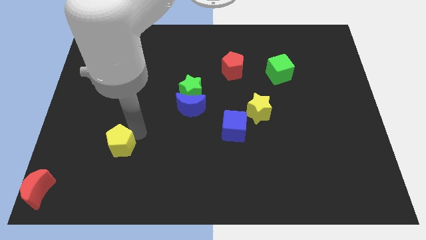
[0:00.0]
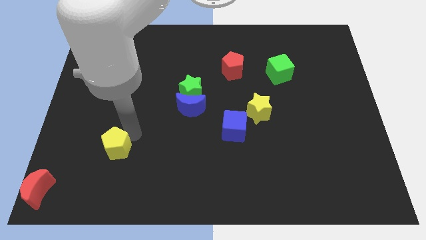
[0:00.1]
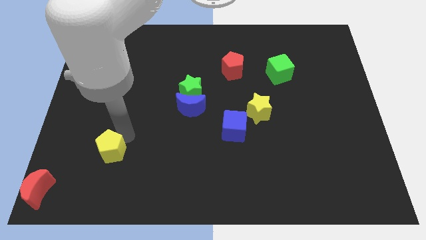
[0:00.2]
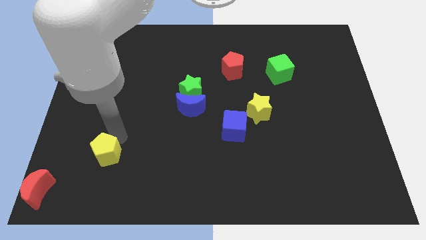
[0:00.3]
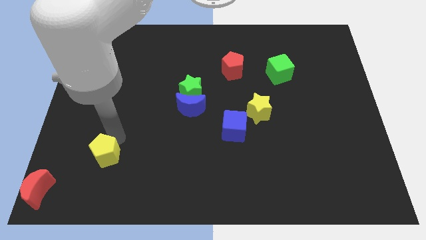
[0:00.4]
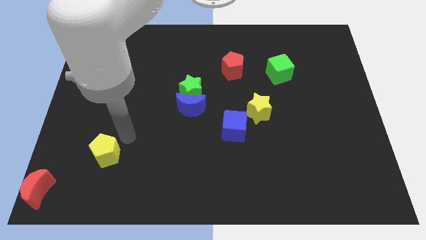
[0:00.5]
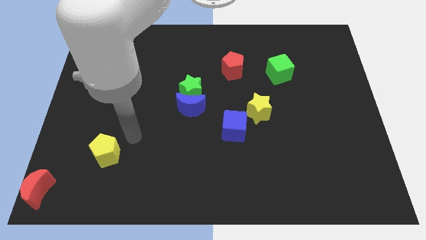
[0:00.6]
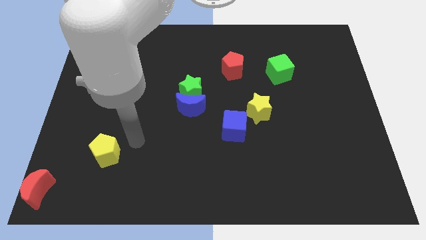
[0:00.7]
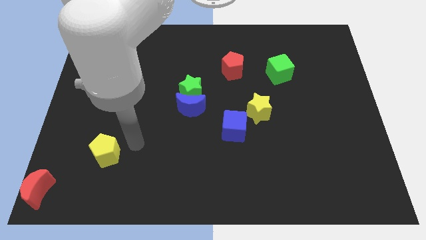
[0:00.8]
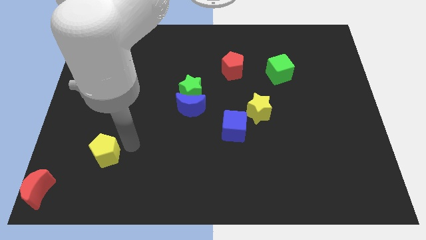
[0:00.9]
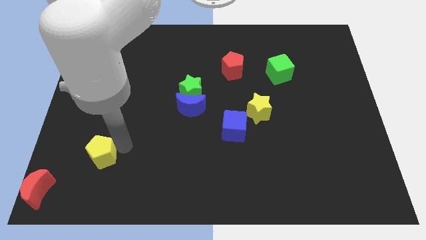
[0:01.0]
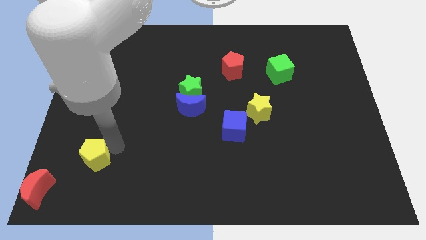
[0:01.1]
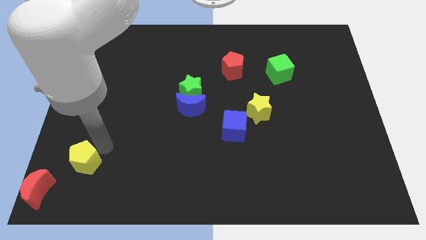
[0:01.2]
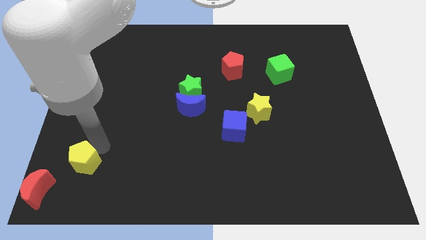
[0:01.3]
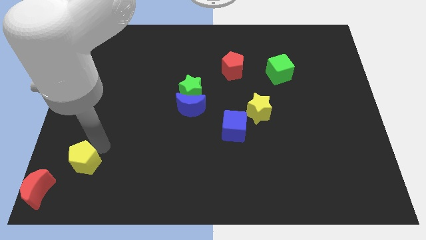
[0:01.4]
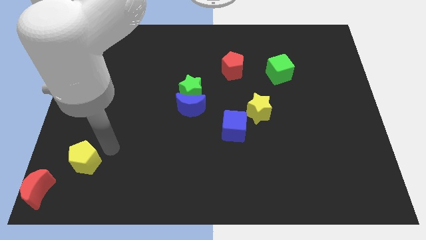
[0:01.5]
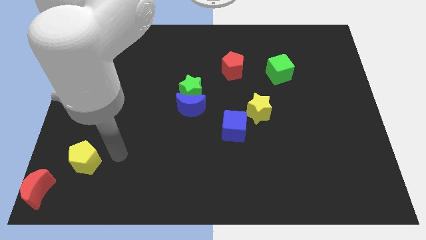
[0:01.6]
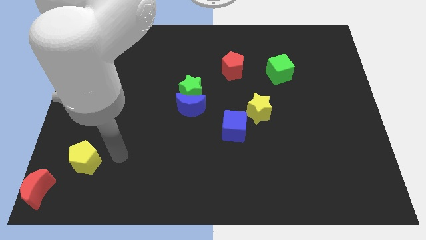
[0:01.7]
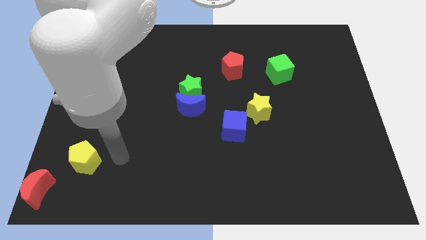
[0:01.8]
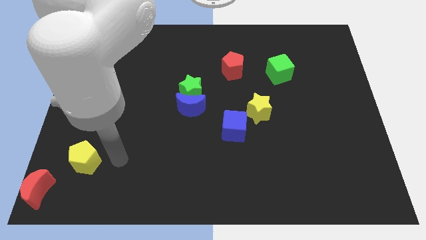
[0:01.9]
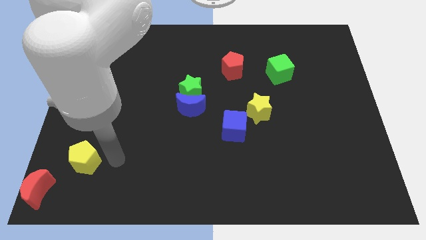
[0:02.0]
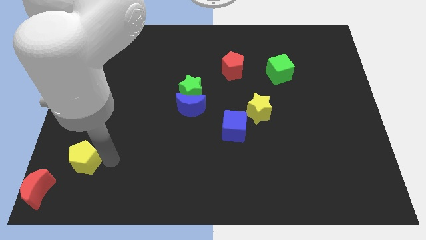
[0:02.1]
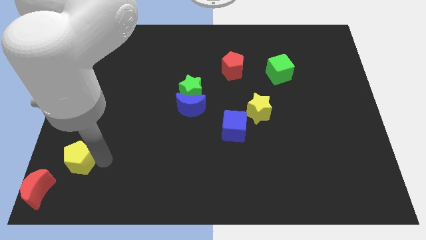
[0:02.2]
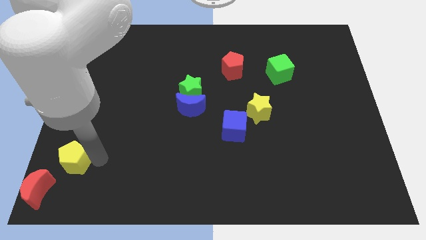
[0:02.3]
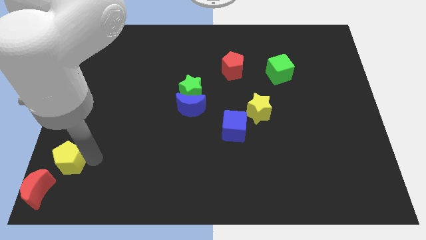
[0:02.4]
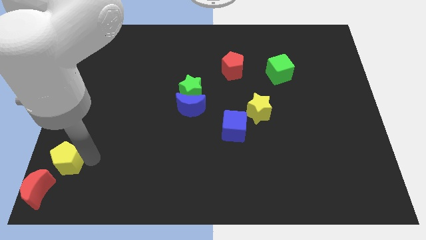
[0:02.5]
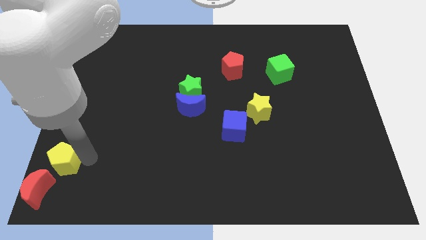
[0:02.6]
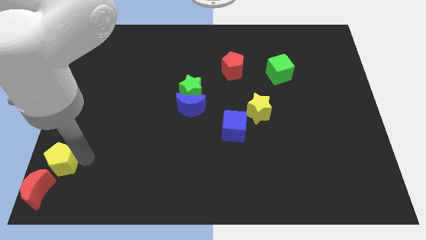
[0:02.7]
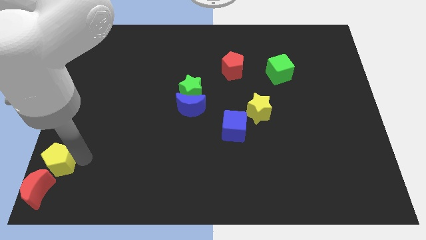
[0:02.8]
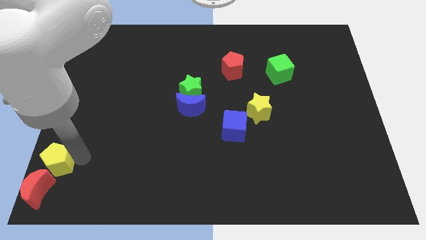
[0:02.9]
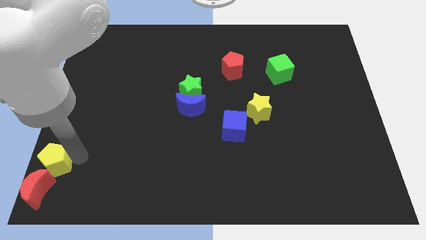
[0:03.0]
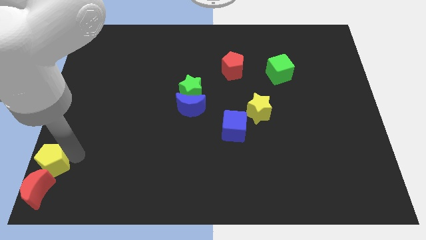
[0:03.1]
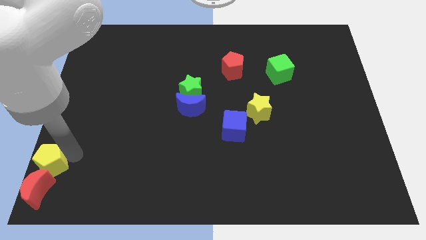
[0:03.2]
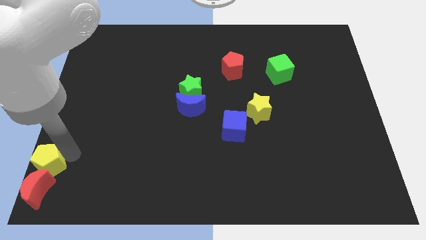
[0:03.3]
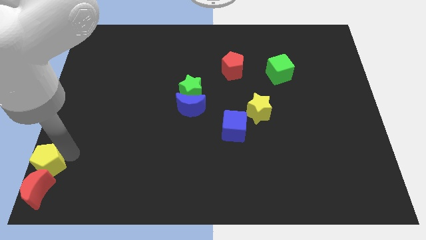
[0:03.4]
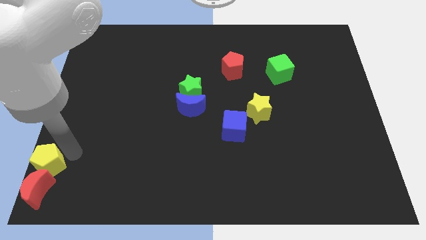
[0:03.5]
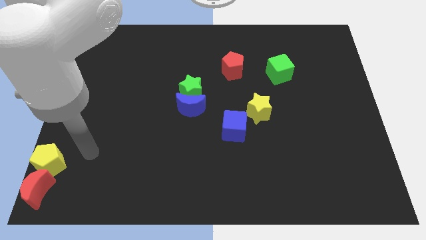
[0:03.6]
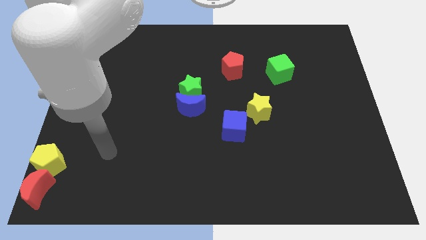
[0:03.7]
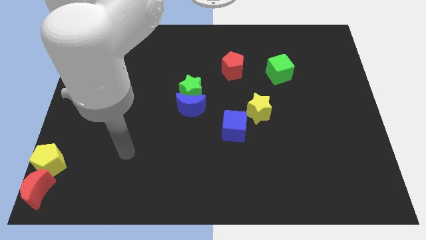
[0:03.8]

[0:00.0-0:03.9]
place the yellow pentagon above the red moon

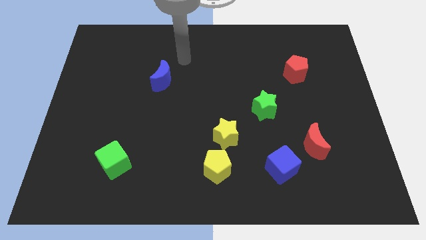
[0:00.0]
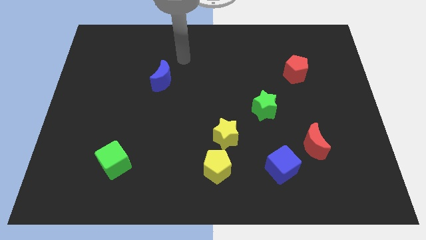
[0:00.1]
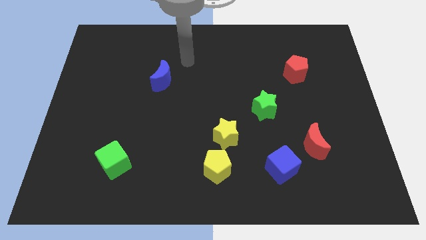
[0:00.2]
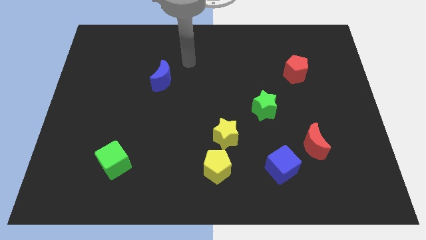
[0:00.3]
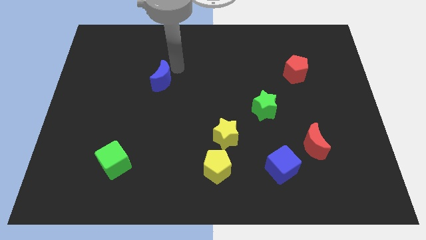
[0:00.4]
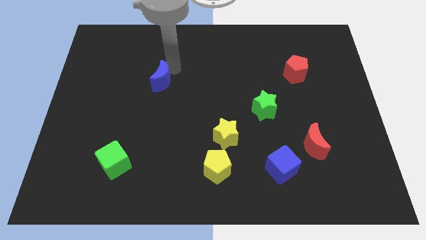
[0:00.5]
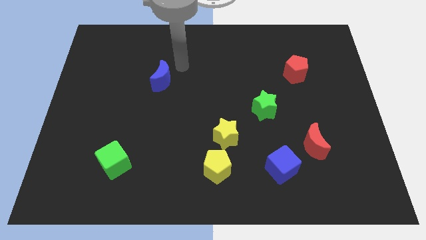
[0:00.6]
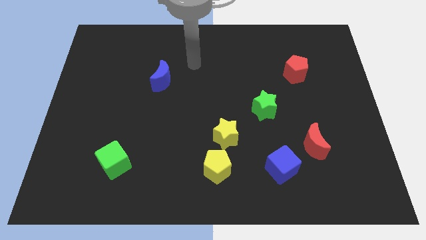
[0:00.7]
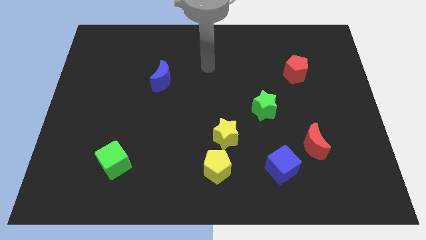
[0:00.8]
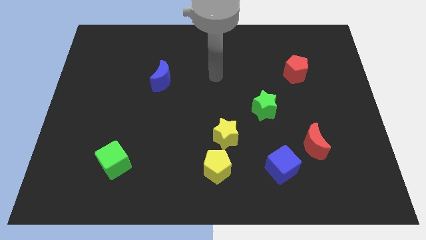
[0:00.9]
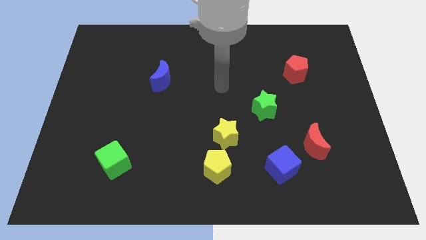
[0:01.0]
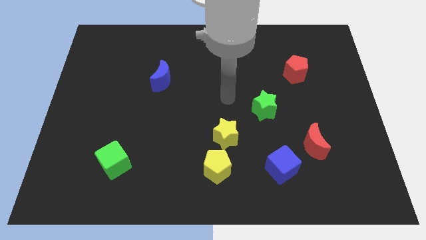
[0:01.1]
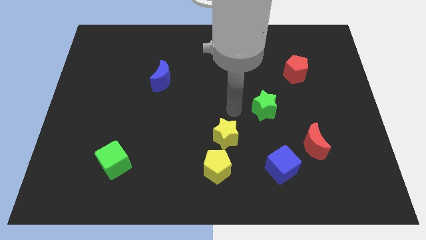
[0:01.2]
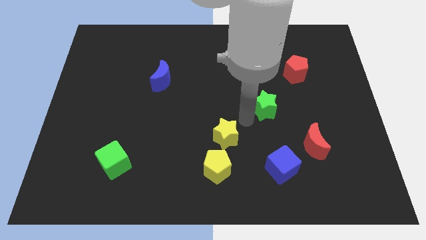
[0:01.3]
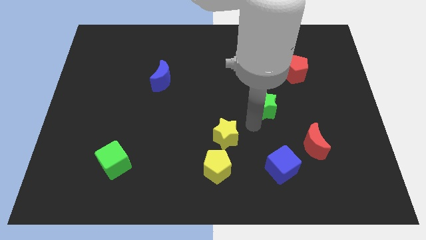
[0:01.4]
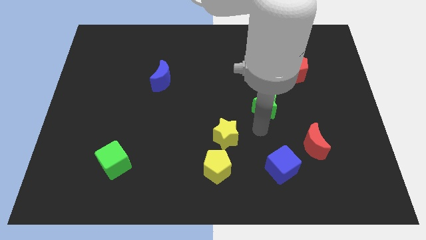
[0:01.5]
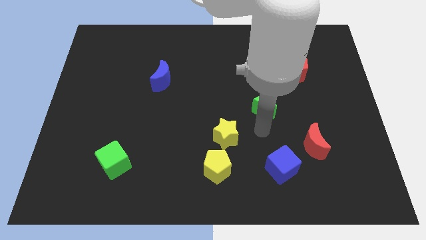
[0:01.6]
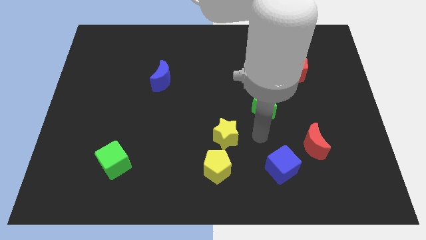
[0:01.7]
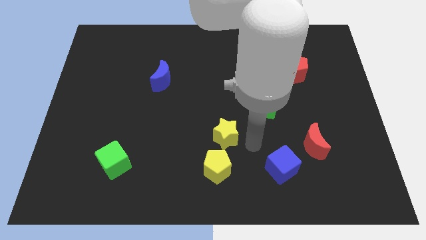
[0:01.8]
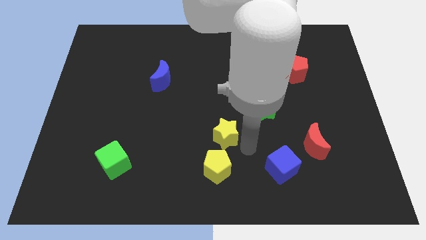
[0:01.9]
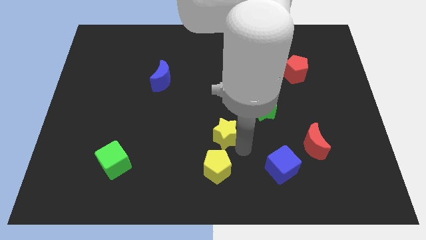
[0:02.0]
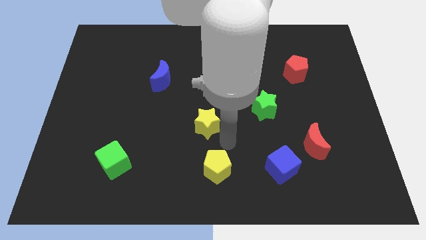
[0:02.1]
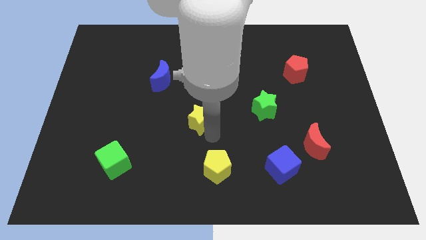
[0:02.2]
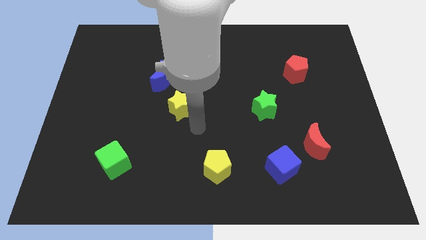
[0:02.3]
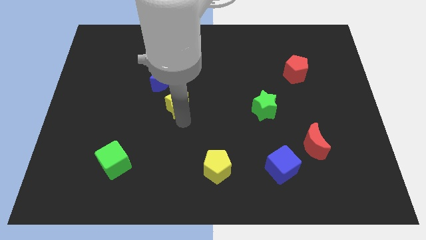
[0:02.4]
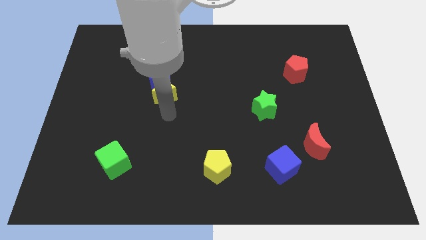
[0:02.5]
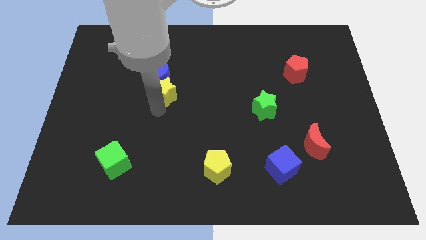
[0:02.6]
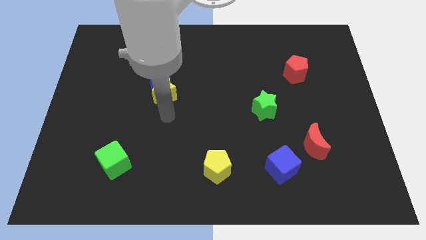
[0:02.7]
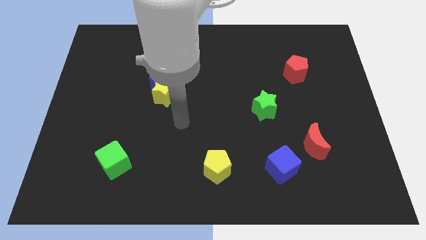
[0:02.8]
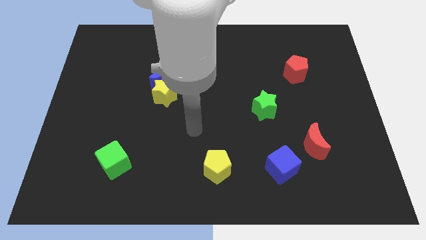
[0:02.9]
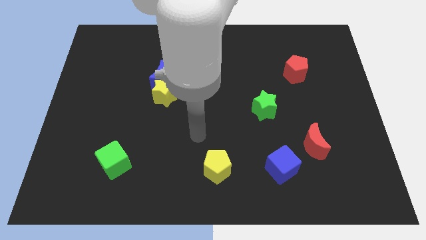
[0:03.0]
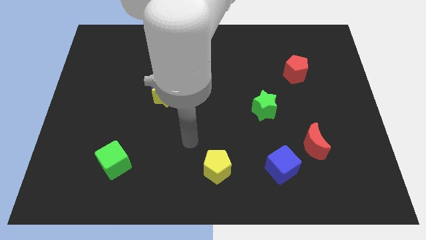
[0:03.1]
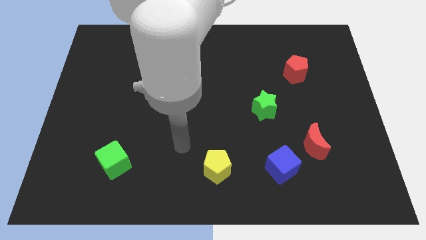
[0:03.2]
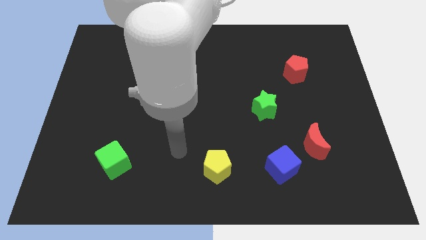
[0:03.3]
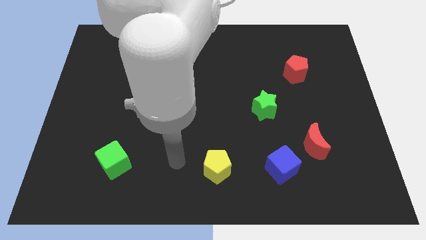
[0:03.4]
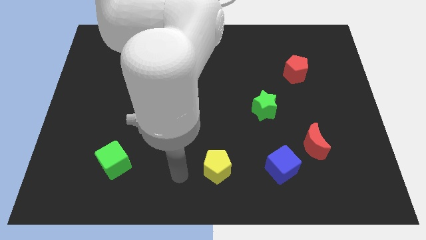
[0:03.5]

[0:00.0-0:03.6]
place the yellow star under the blue crescent

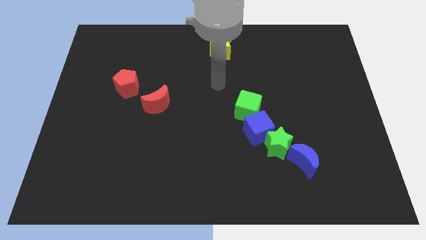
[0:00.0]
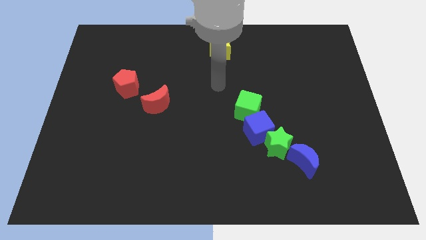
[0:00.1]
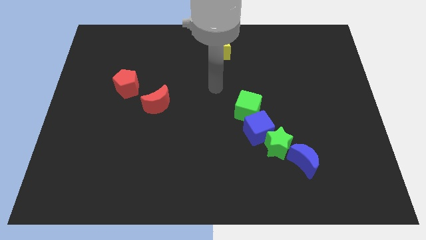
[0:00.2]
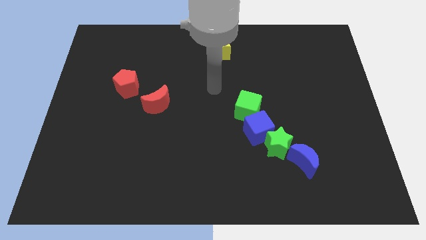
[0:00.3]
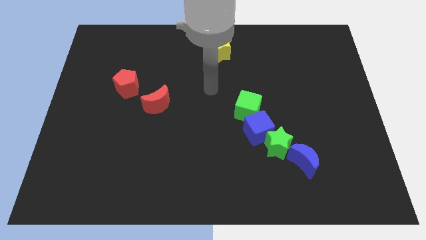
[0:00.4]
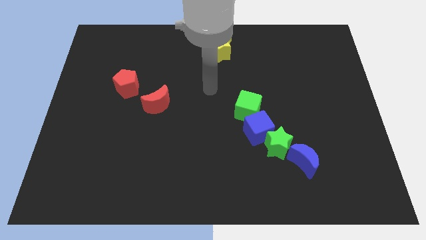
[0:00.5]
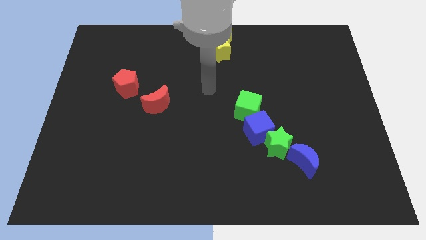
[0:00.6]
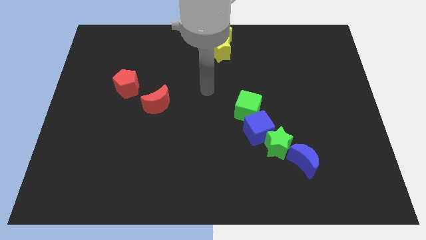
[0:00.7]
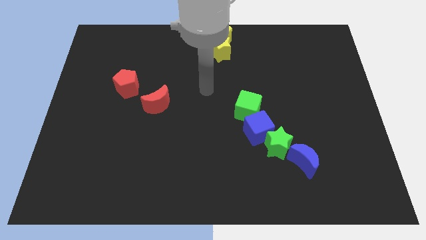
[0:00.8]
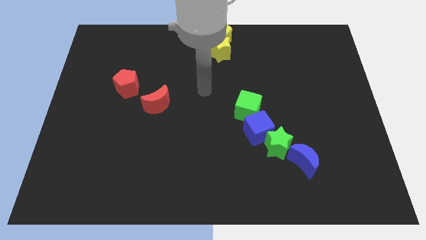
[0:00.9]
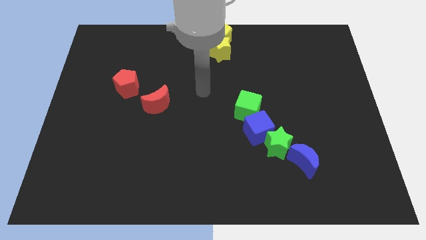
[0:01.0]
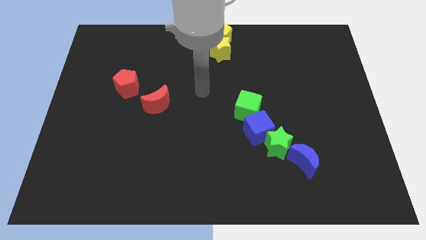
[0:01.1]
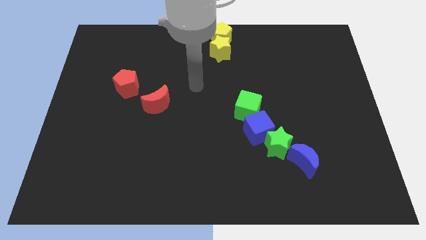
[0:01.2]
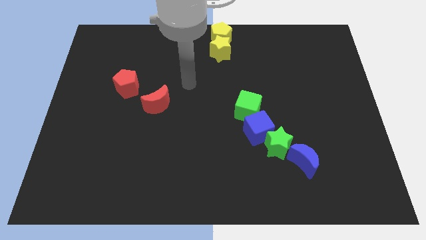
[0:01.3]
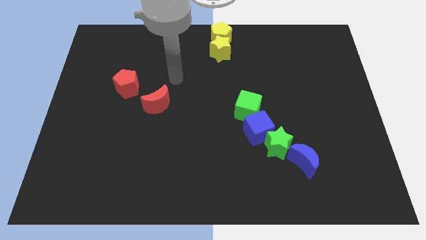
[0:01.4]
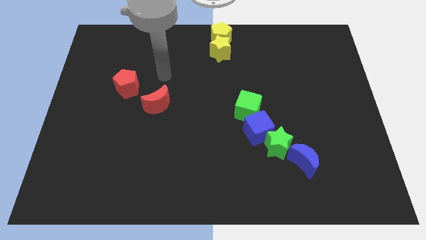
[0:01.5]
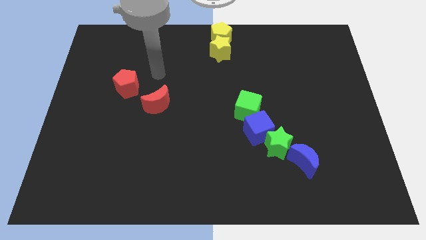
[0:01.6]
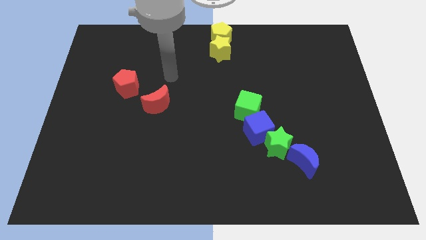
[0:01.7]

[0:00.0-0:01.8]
point your arm at the top of the red crescent
